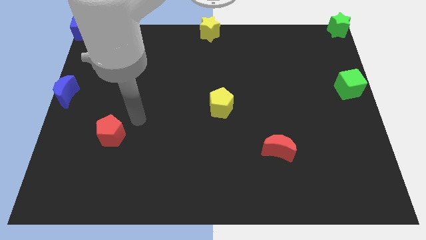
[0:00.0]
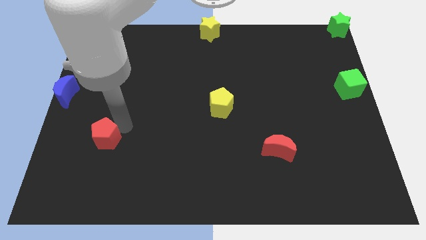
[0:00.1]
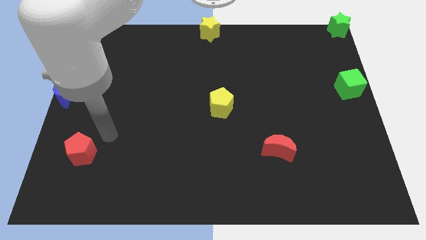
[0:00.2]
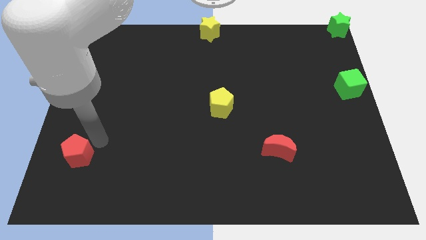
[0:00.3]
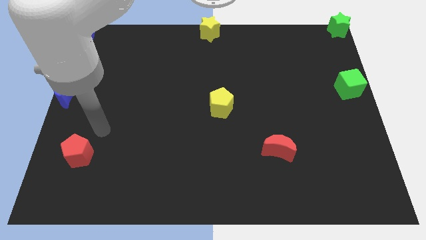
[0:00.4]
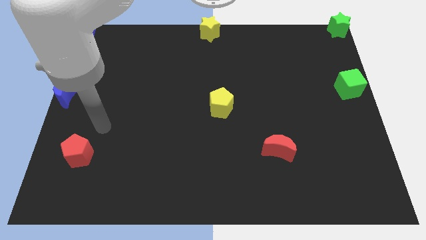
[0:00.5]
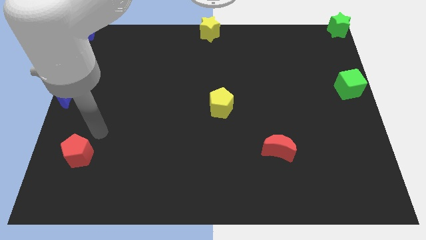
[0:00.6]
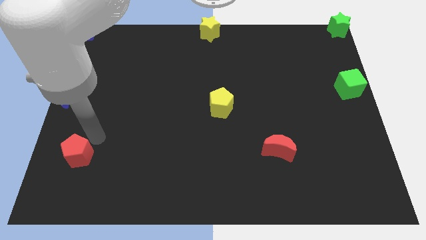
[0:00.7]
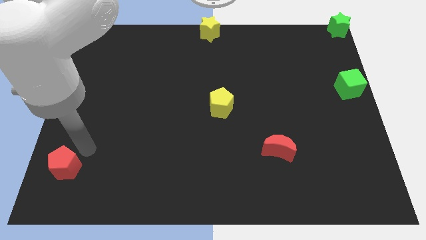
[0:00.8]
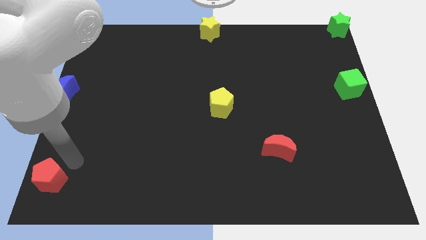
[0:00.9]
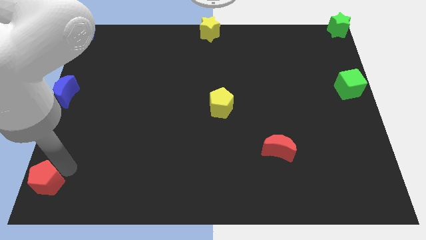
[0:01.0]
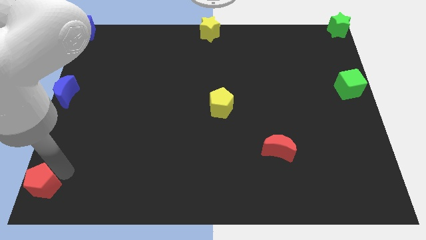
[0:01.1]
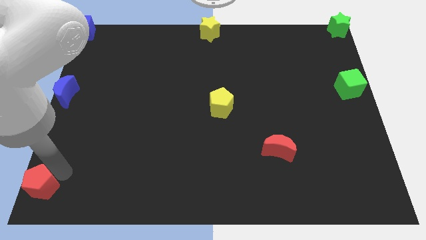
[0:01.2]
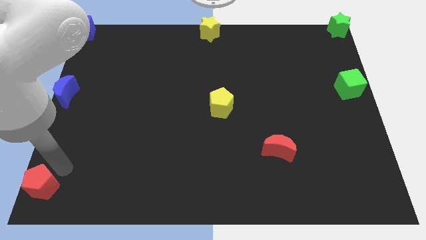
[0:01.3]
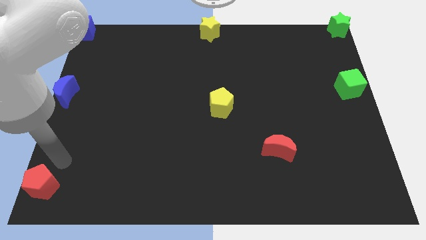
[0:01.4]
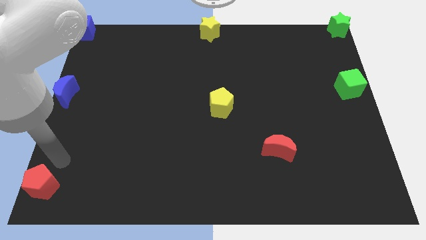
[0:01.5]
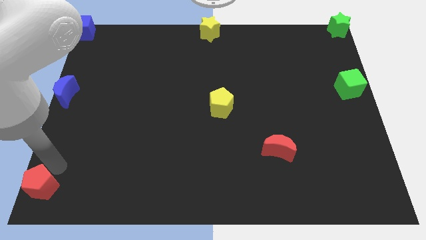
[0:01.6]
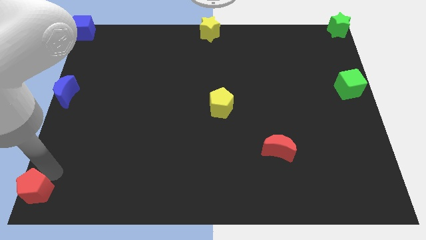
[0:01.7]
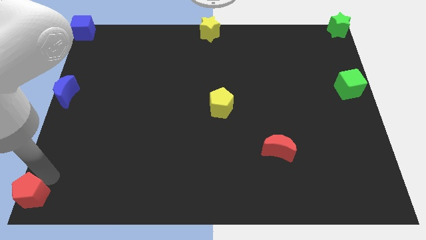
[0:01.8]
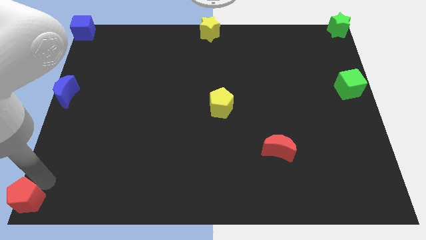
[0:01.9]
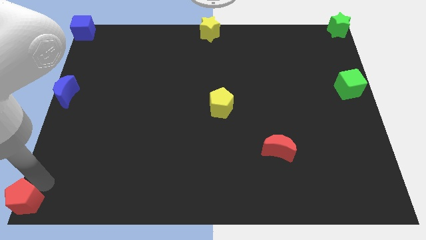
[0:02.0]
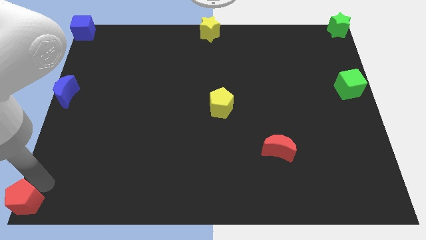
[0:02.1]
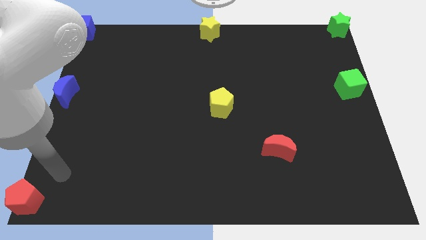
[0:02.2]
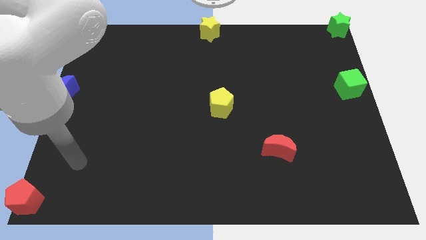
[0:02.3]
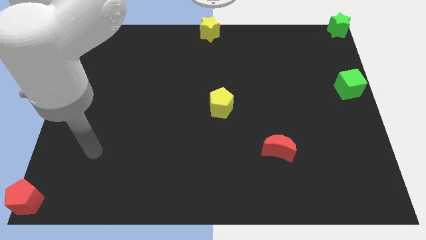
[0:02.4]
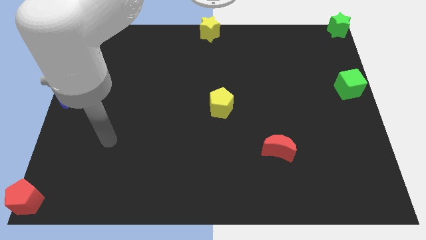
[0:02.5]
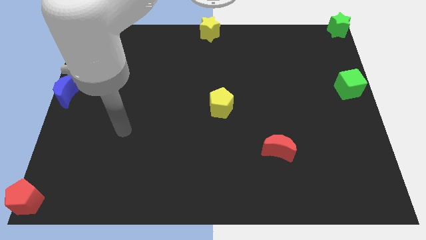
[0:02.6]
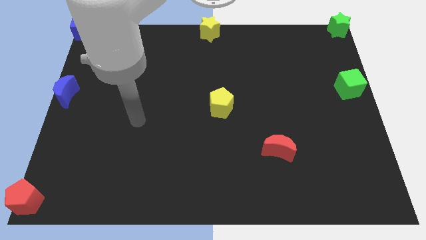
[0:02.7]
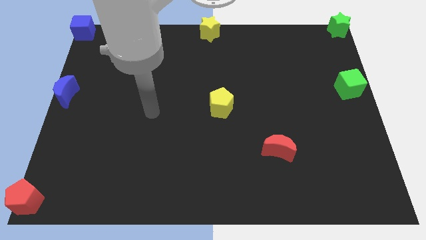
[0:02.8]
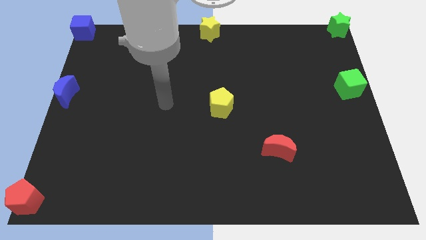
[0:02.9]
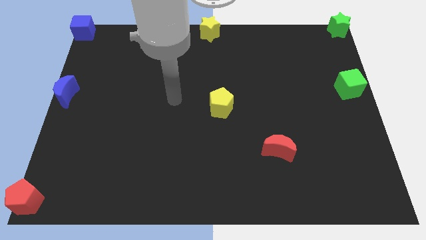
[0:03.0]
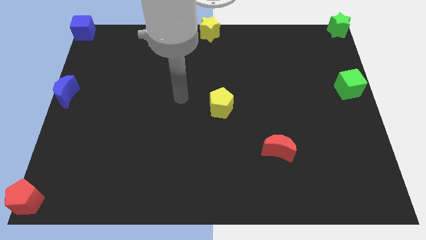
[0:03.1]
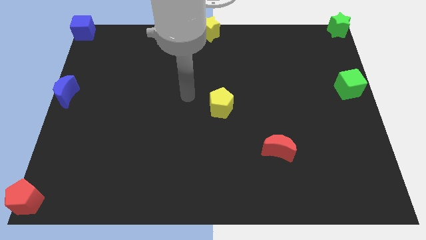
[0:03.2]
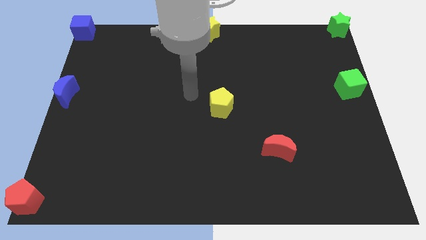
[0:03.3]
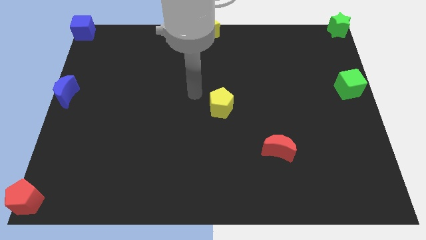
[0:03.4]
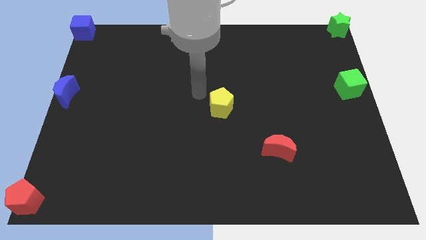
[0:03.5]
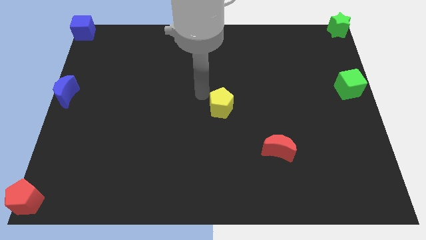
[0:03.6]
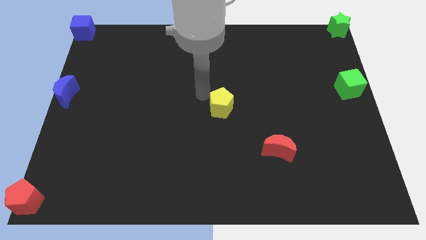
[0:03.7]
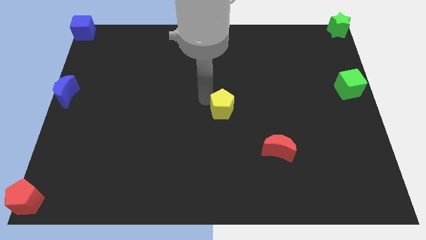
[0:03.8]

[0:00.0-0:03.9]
move red pentagon to the bottom left corner of the board

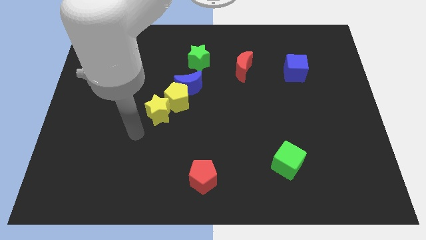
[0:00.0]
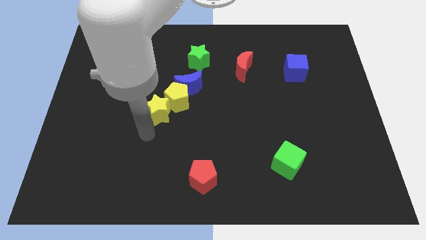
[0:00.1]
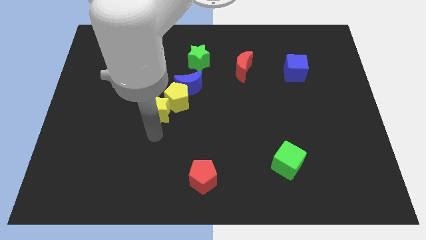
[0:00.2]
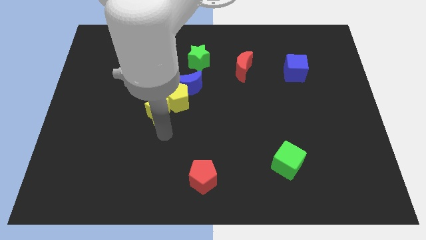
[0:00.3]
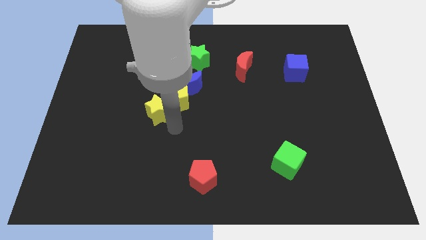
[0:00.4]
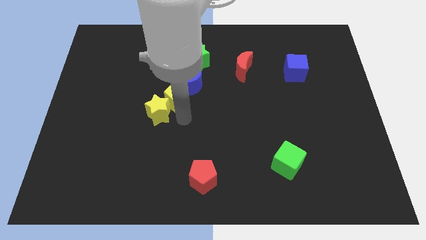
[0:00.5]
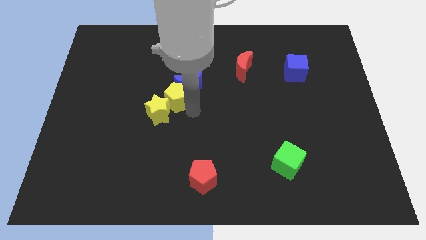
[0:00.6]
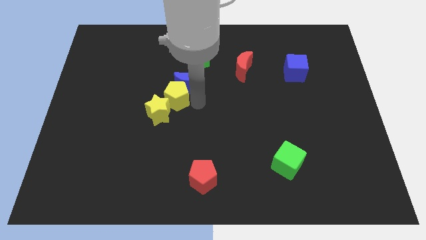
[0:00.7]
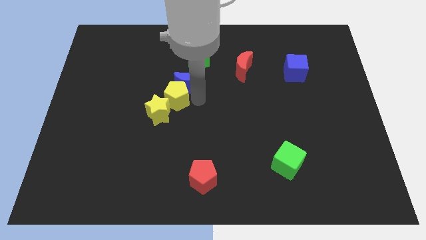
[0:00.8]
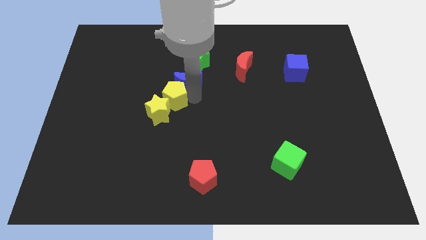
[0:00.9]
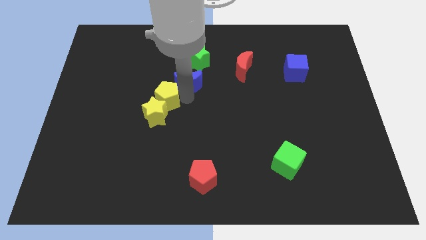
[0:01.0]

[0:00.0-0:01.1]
move the arm in between the yellow pentagon and blue moon

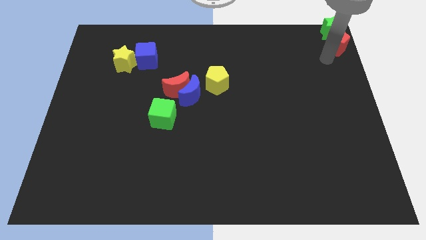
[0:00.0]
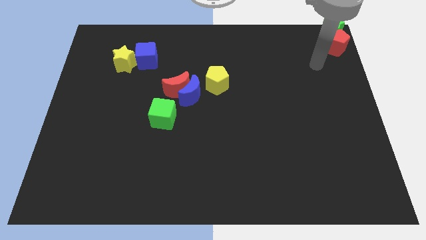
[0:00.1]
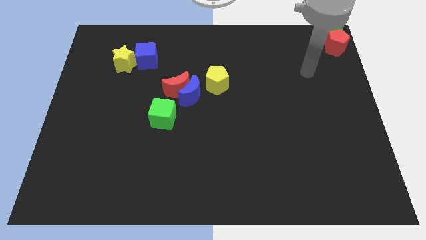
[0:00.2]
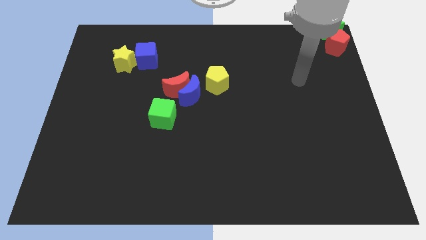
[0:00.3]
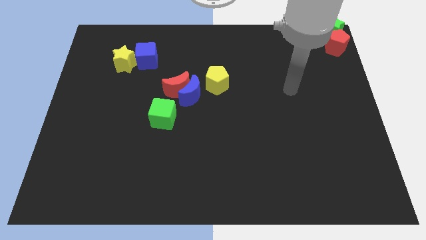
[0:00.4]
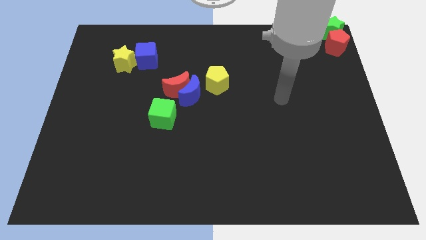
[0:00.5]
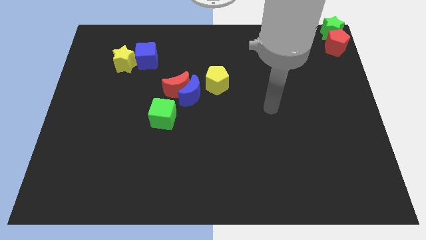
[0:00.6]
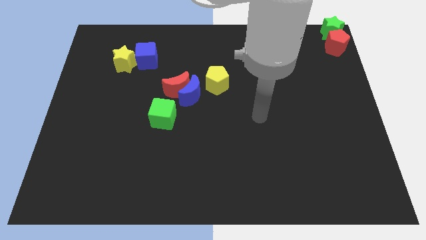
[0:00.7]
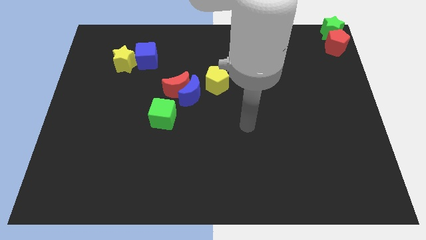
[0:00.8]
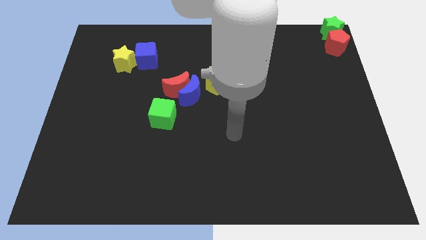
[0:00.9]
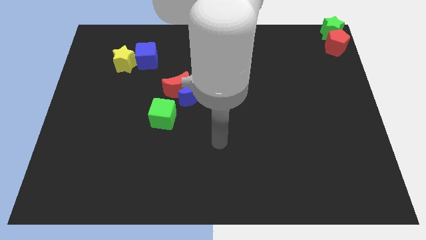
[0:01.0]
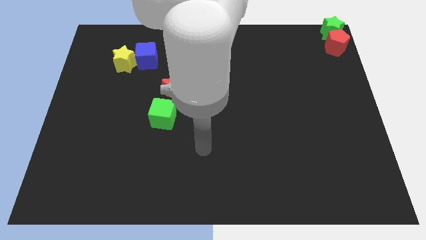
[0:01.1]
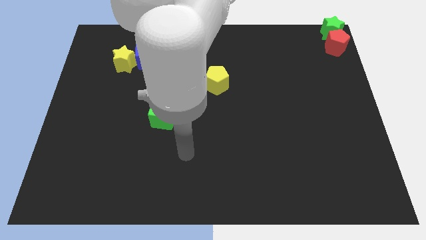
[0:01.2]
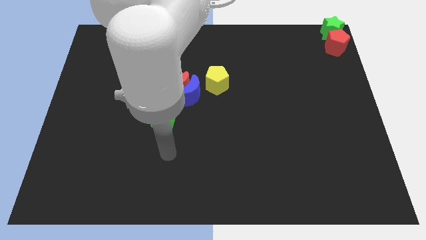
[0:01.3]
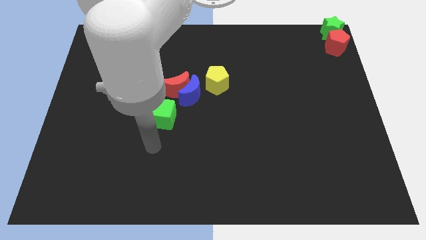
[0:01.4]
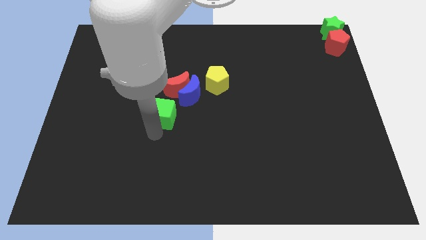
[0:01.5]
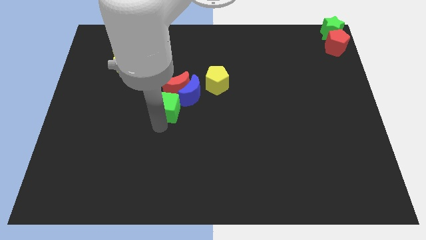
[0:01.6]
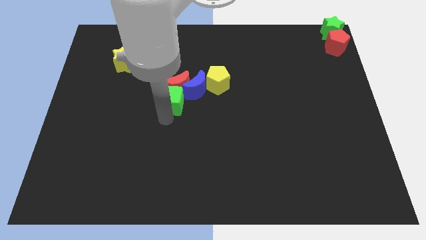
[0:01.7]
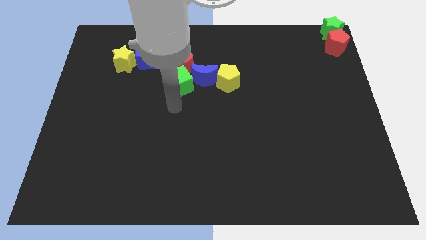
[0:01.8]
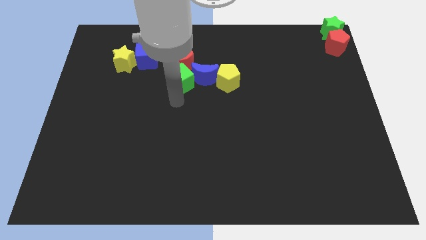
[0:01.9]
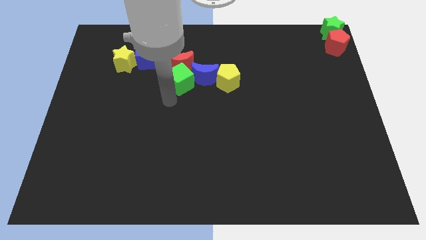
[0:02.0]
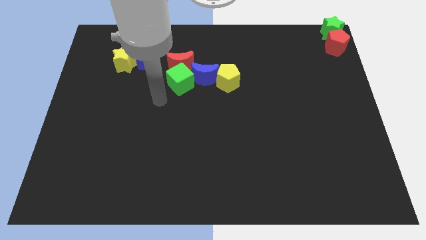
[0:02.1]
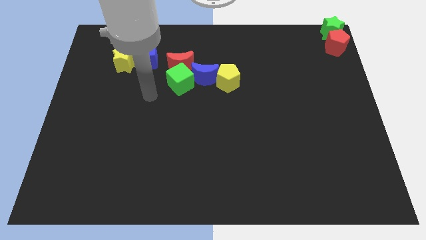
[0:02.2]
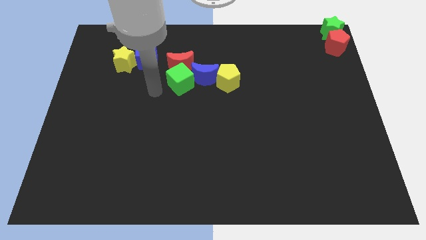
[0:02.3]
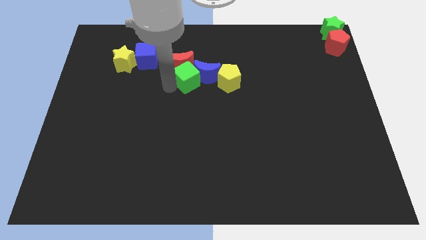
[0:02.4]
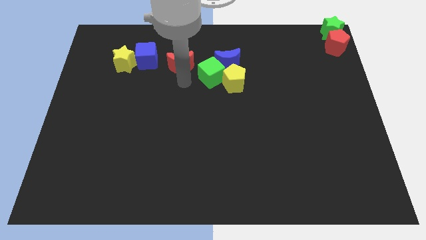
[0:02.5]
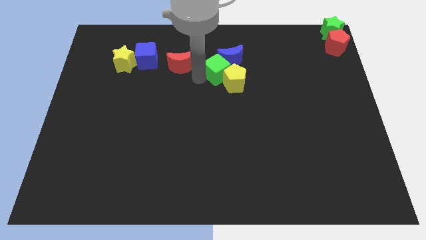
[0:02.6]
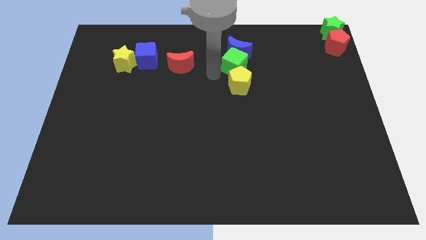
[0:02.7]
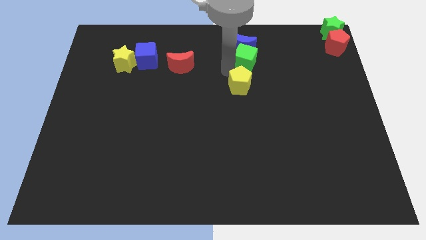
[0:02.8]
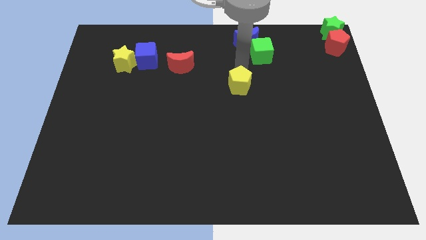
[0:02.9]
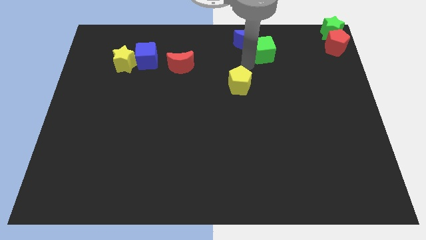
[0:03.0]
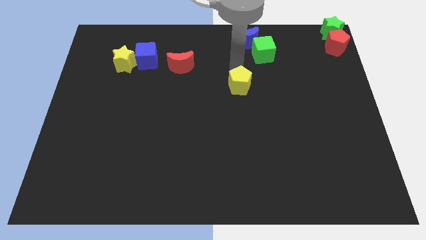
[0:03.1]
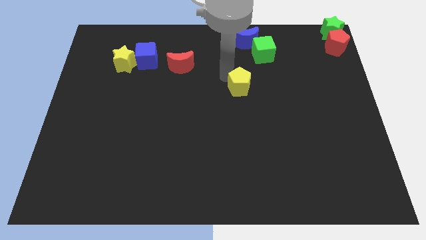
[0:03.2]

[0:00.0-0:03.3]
push a group of blocks upward

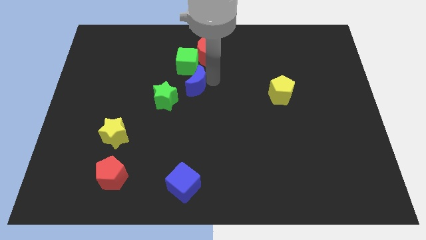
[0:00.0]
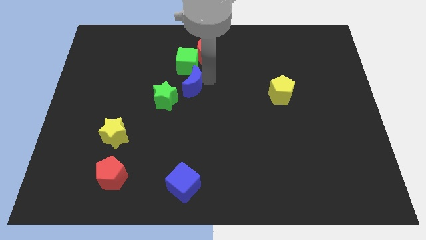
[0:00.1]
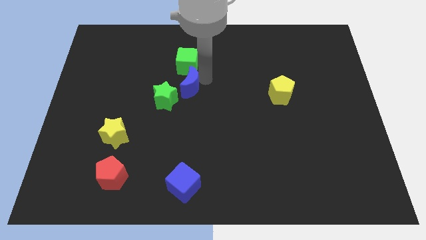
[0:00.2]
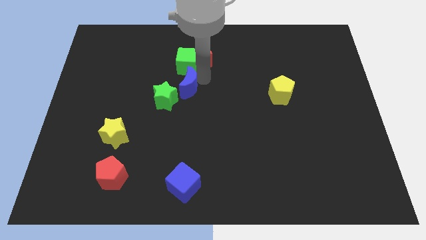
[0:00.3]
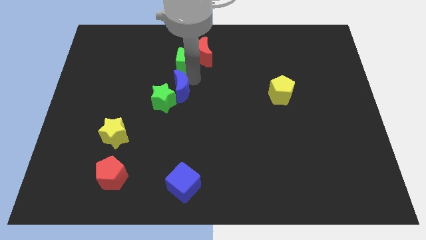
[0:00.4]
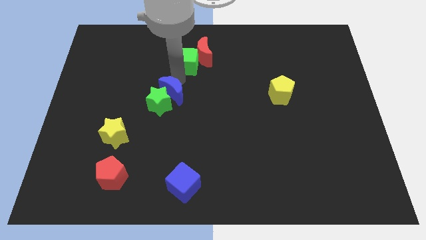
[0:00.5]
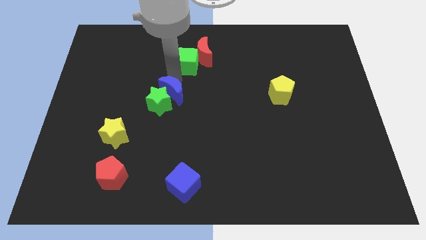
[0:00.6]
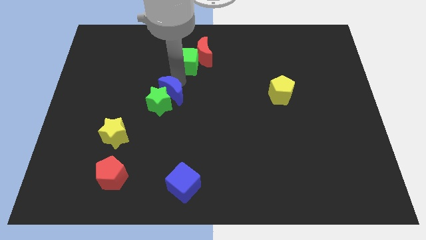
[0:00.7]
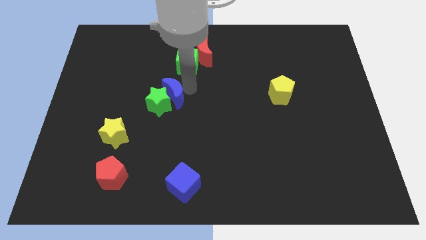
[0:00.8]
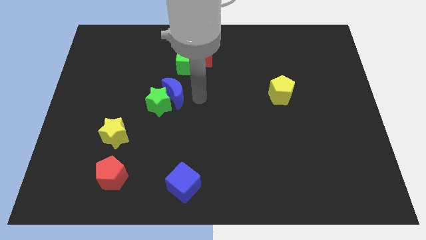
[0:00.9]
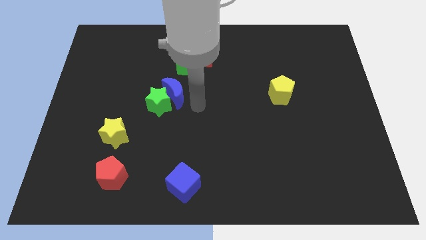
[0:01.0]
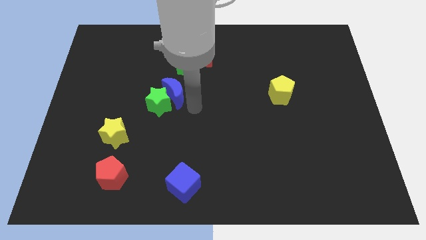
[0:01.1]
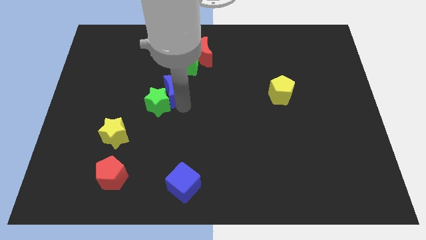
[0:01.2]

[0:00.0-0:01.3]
push the blue moon into the green star
